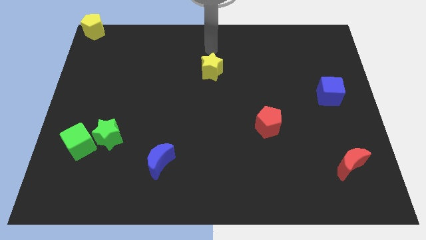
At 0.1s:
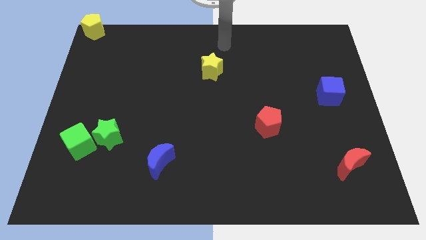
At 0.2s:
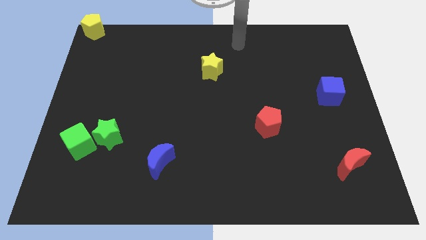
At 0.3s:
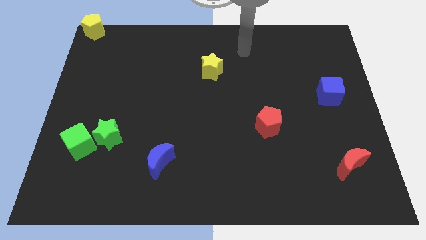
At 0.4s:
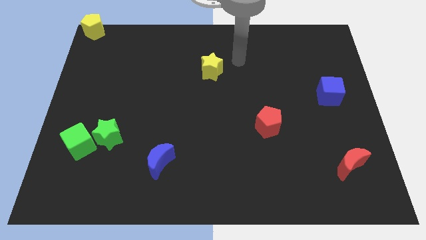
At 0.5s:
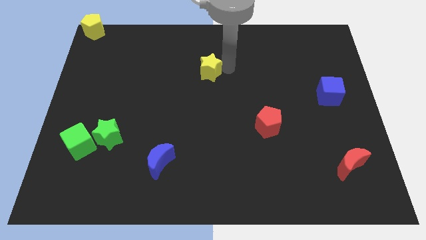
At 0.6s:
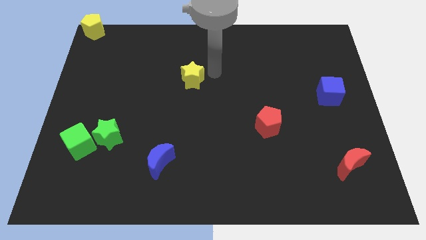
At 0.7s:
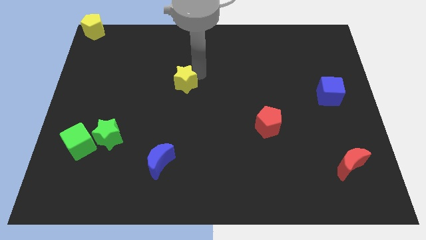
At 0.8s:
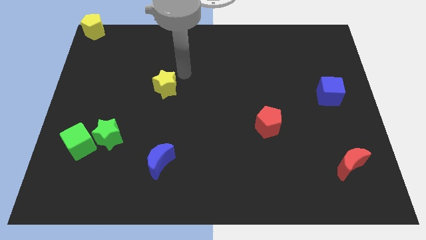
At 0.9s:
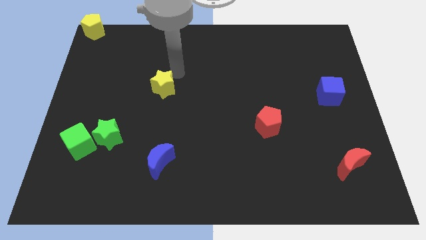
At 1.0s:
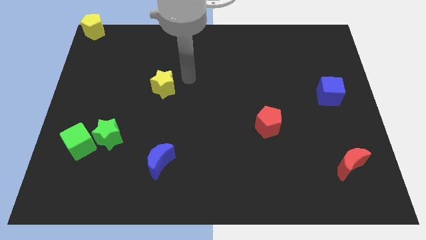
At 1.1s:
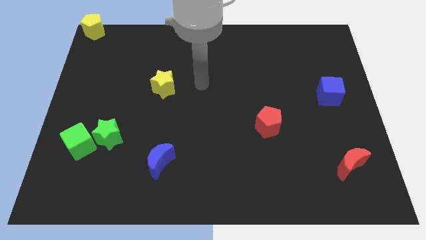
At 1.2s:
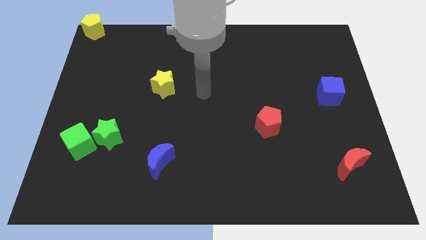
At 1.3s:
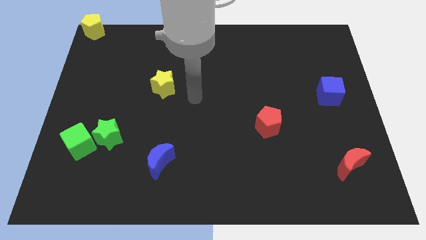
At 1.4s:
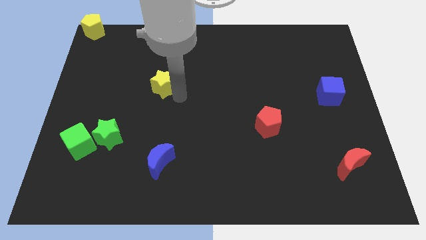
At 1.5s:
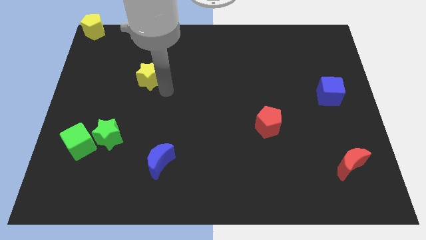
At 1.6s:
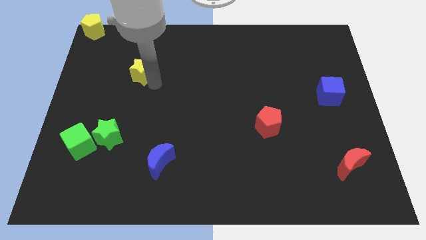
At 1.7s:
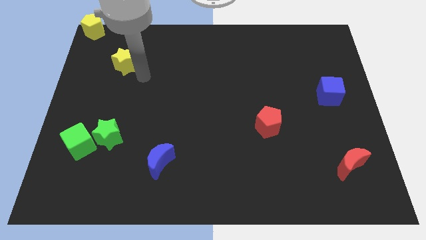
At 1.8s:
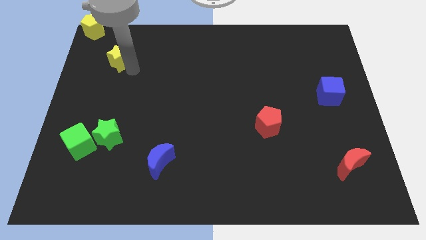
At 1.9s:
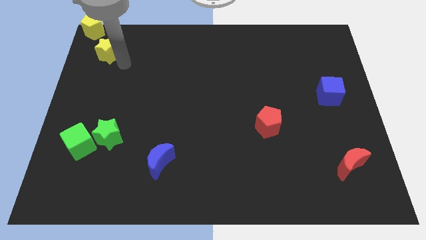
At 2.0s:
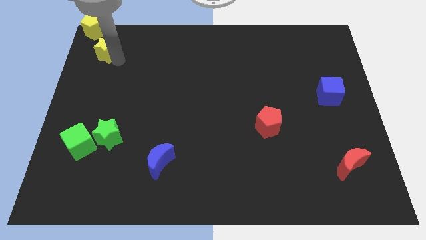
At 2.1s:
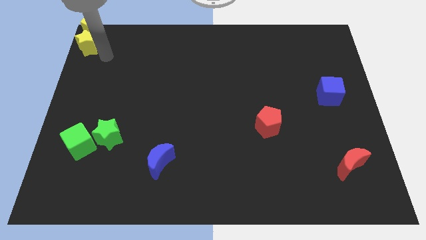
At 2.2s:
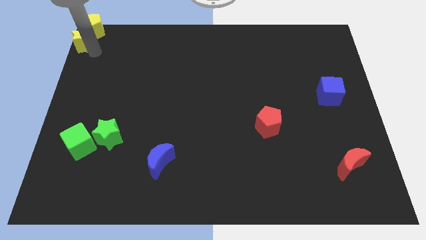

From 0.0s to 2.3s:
move the yellow star to the bottom side of the yellow pentagon

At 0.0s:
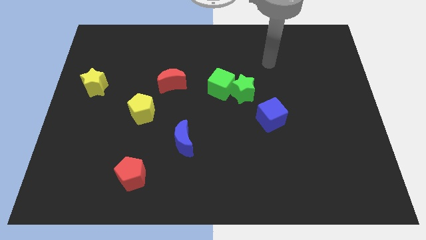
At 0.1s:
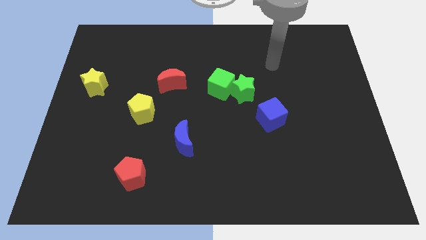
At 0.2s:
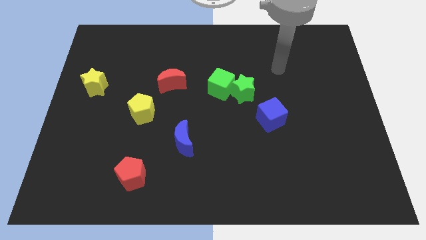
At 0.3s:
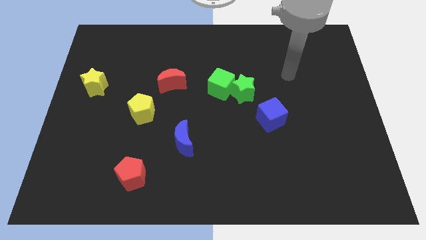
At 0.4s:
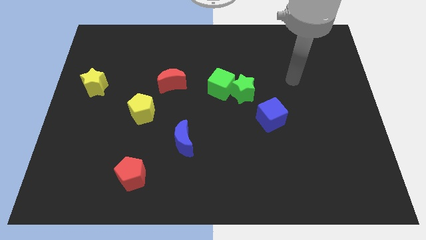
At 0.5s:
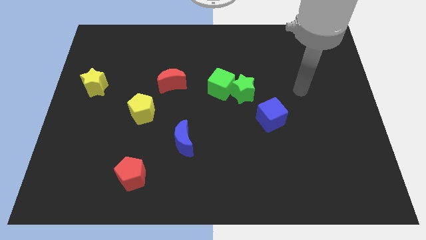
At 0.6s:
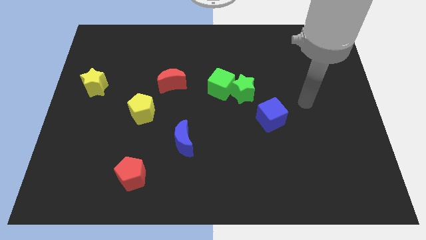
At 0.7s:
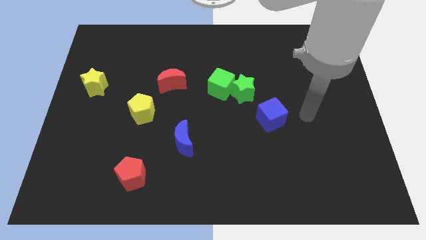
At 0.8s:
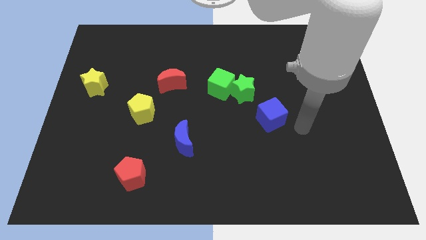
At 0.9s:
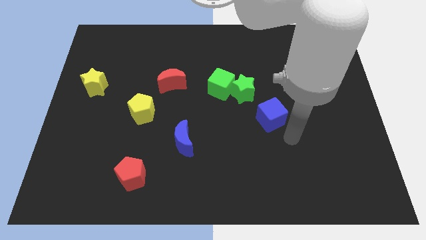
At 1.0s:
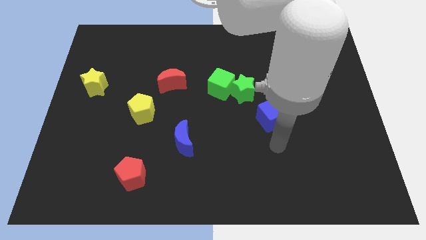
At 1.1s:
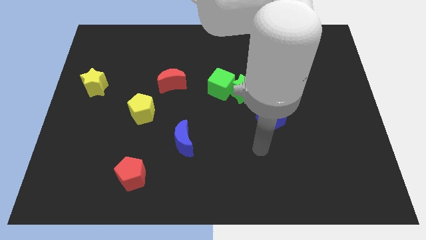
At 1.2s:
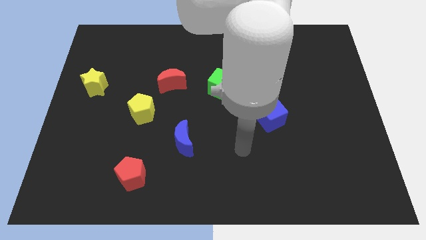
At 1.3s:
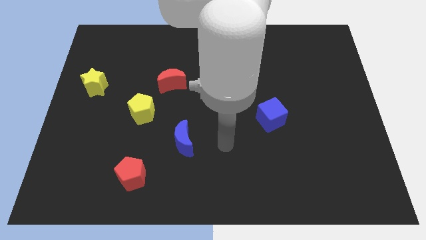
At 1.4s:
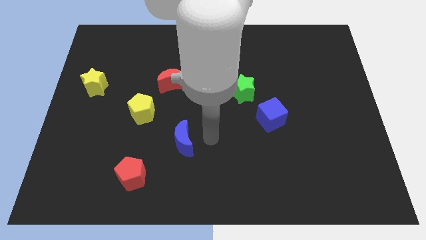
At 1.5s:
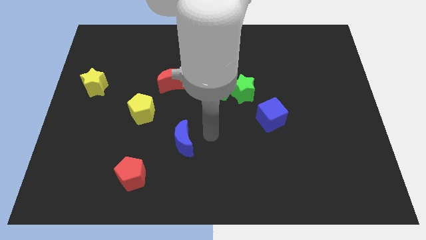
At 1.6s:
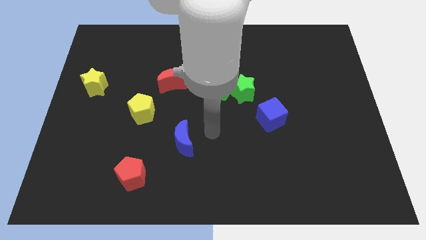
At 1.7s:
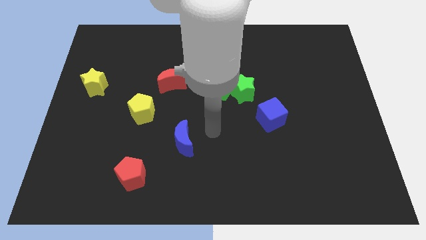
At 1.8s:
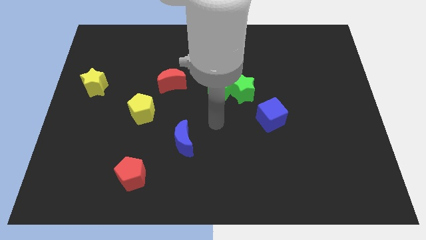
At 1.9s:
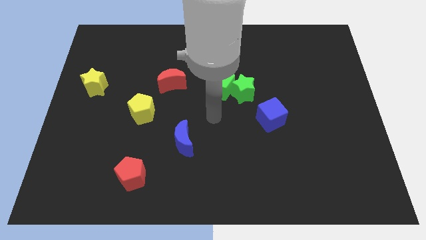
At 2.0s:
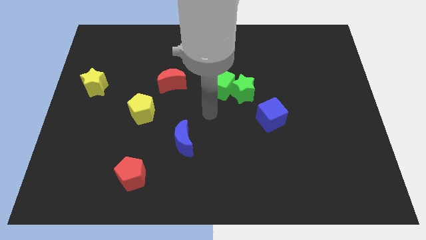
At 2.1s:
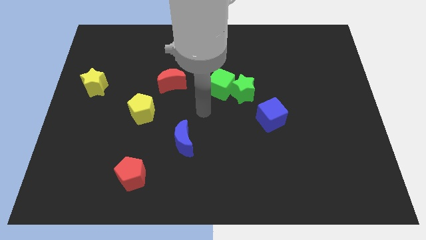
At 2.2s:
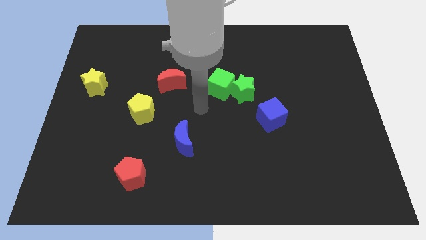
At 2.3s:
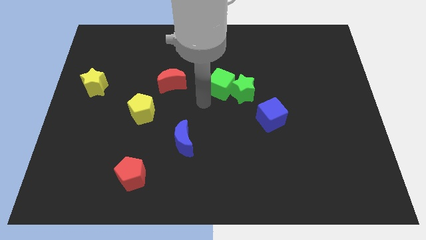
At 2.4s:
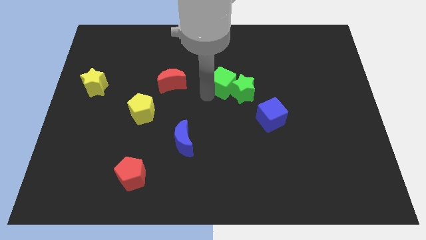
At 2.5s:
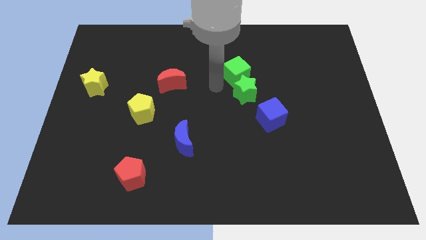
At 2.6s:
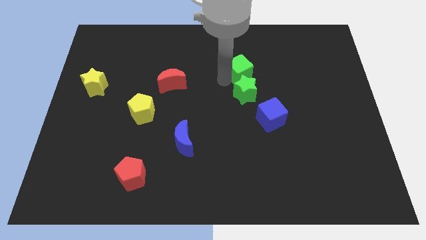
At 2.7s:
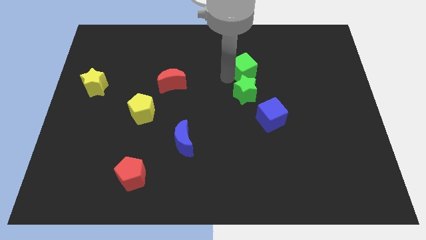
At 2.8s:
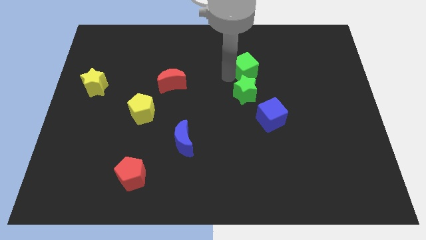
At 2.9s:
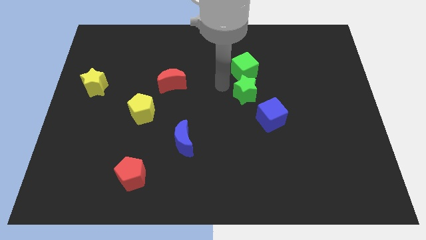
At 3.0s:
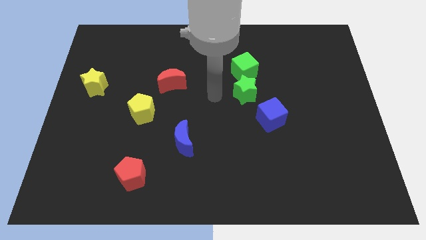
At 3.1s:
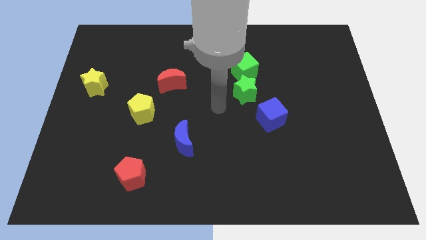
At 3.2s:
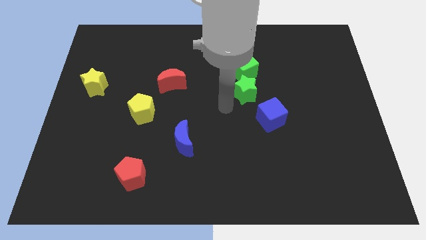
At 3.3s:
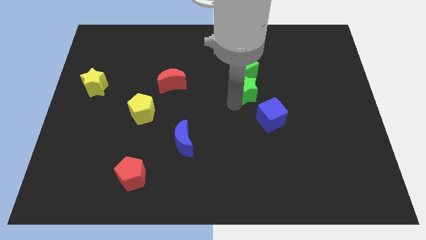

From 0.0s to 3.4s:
place the green cube above the green star

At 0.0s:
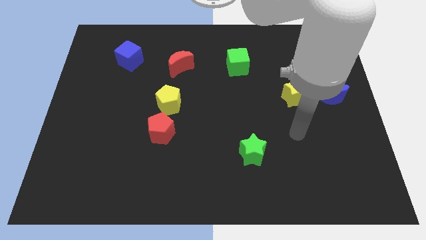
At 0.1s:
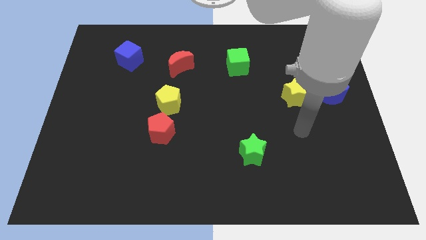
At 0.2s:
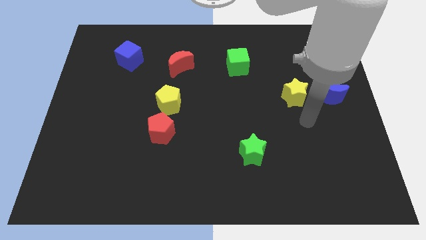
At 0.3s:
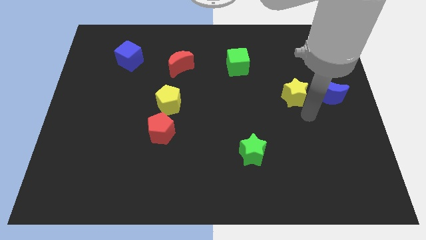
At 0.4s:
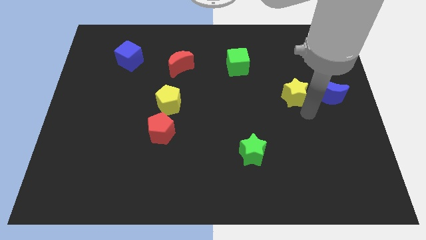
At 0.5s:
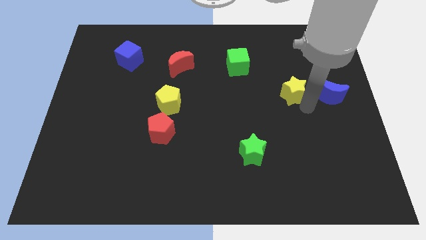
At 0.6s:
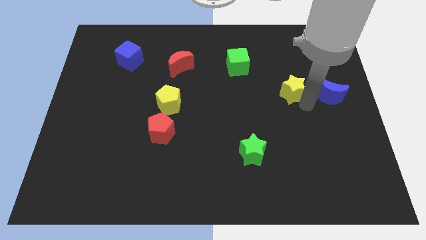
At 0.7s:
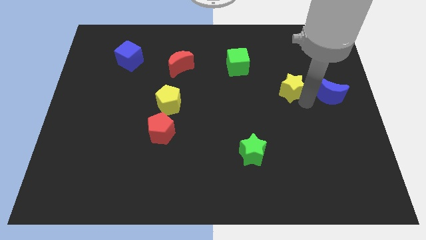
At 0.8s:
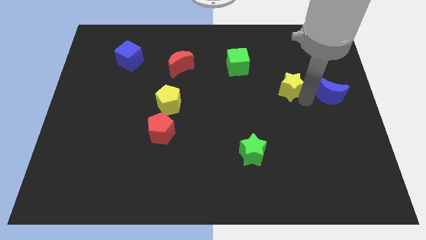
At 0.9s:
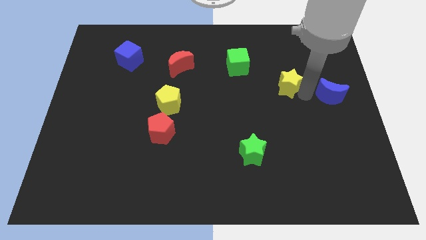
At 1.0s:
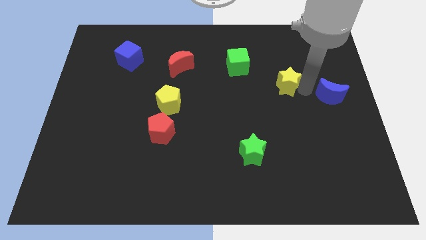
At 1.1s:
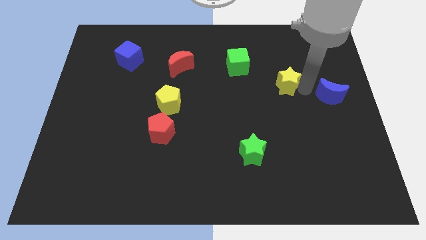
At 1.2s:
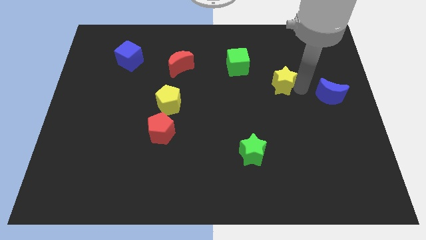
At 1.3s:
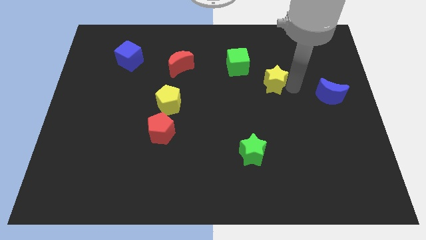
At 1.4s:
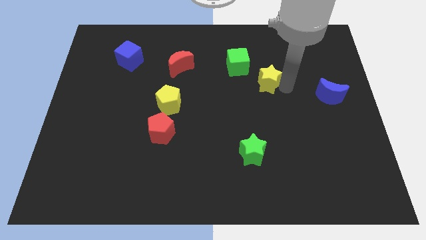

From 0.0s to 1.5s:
move yellow star towards the green cube

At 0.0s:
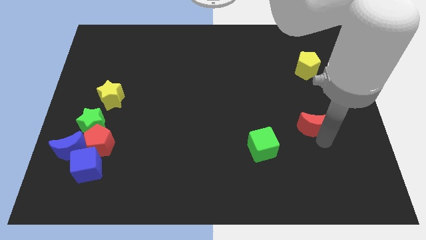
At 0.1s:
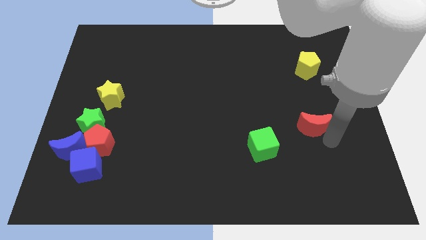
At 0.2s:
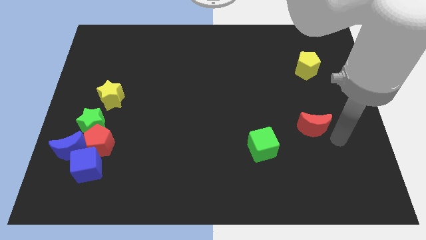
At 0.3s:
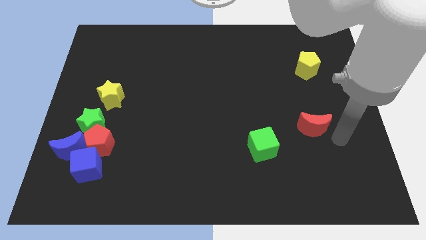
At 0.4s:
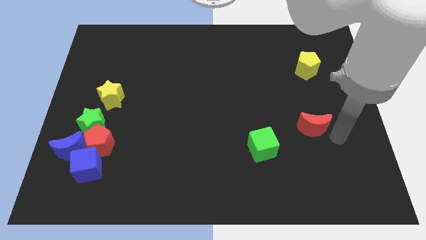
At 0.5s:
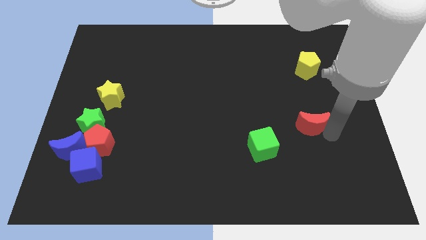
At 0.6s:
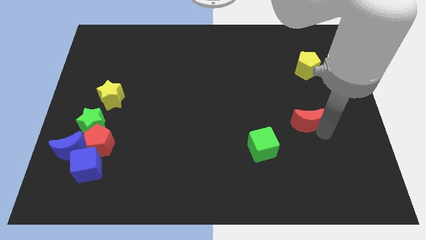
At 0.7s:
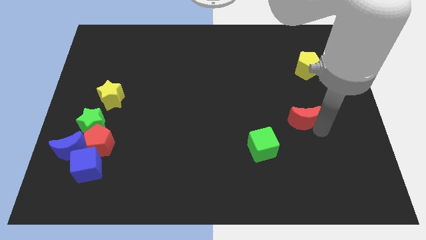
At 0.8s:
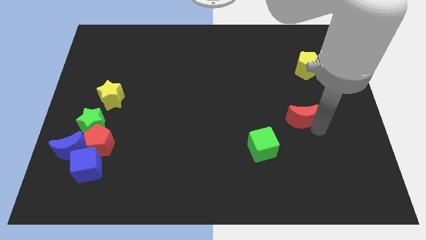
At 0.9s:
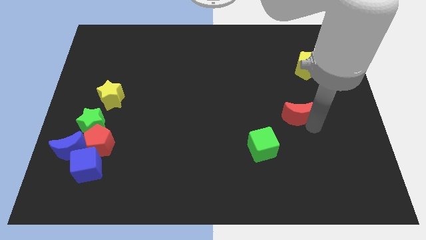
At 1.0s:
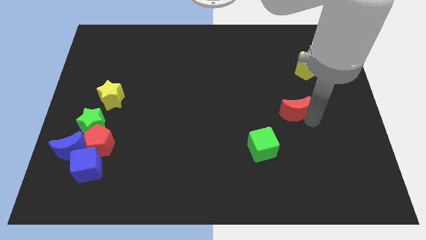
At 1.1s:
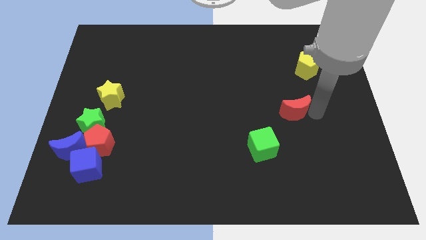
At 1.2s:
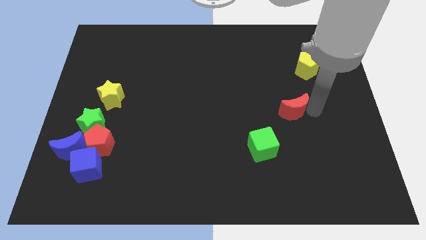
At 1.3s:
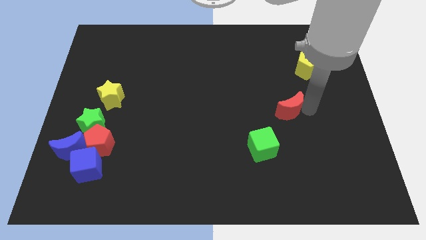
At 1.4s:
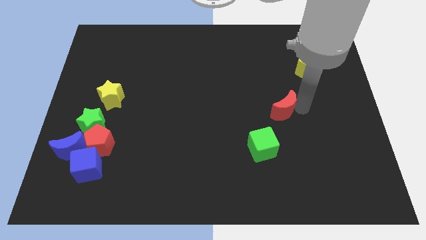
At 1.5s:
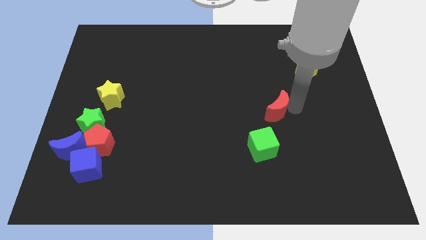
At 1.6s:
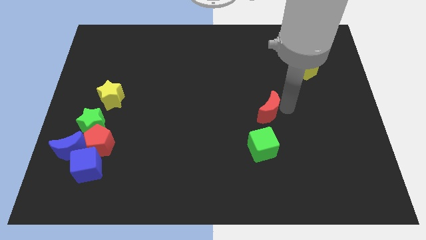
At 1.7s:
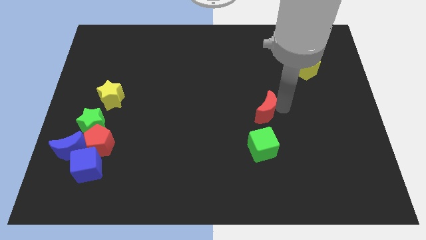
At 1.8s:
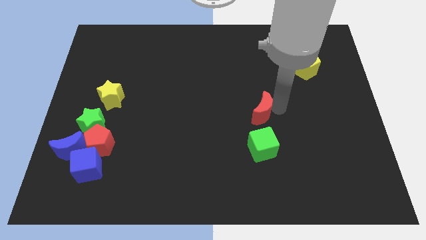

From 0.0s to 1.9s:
move the red crescent to the top of the green cube
